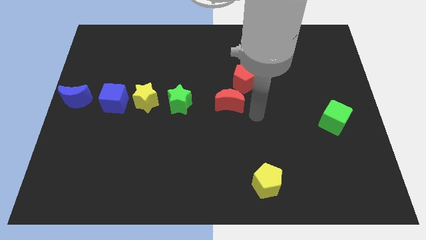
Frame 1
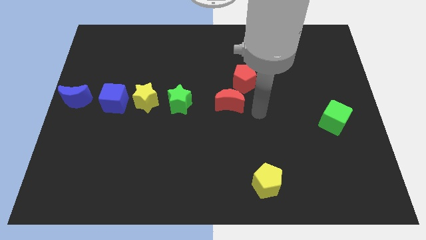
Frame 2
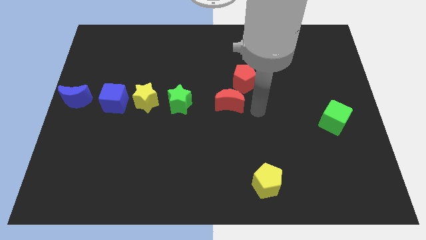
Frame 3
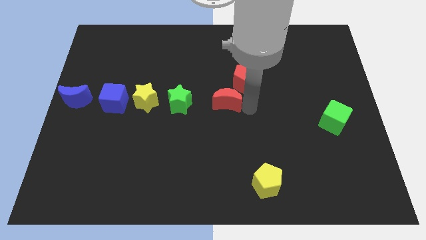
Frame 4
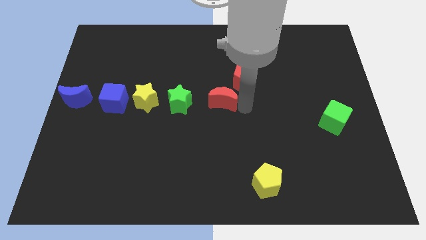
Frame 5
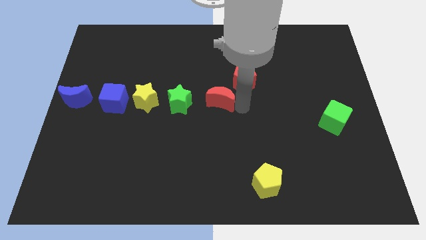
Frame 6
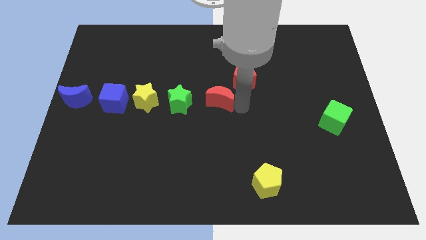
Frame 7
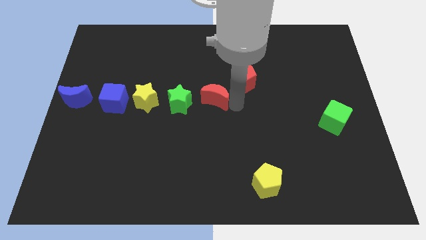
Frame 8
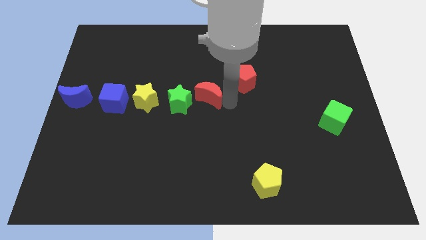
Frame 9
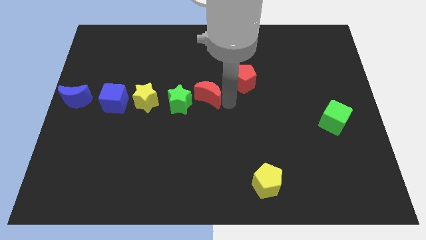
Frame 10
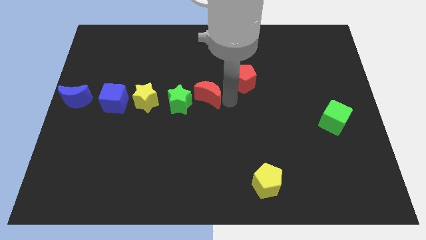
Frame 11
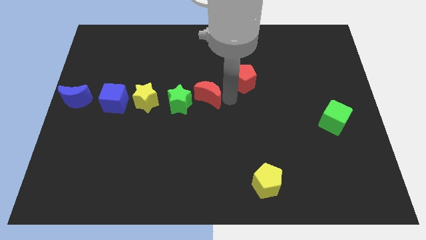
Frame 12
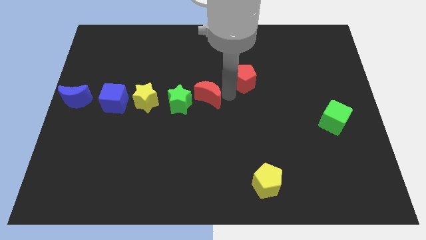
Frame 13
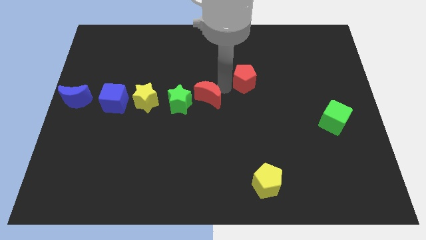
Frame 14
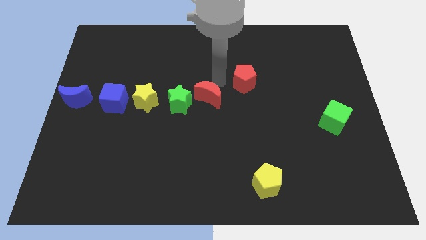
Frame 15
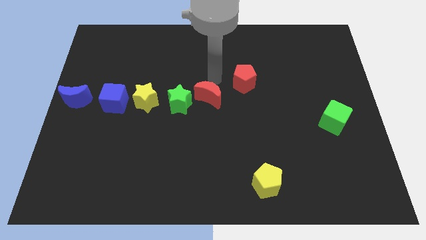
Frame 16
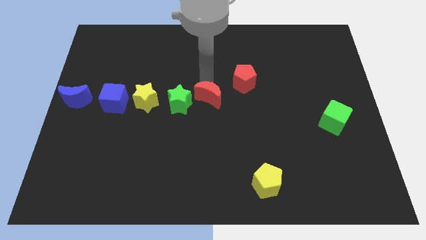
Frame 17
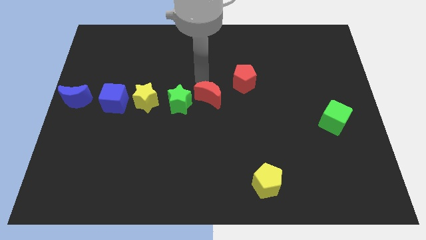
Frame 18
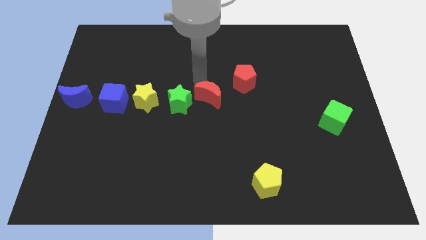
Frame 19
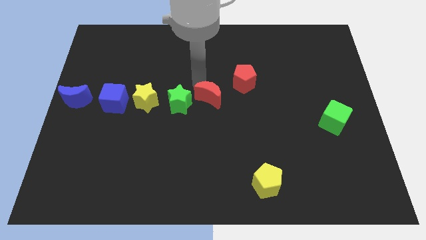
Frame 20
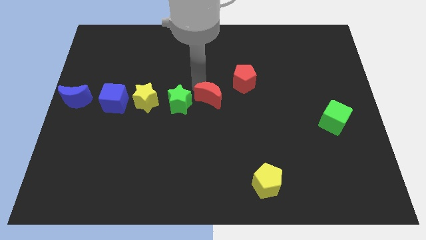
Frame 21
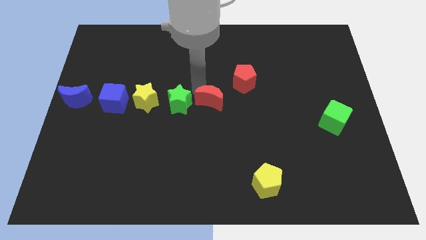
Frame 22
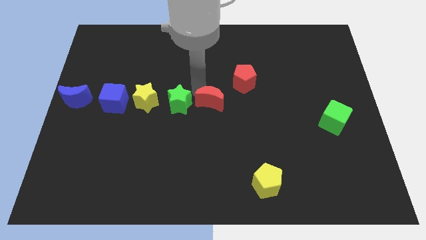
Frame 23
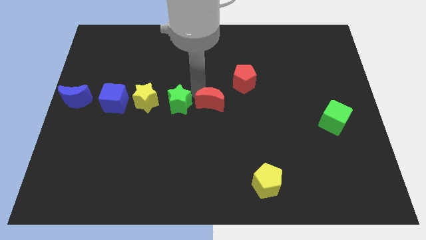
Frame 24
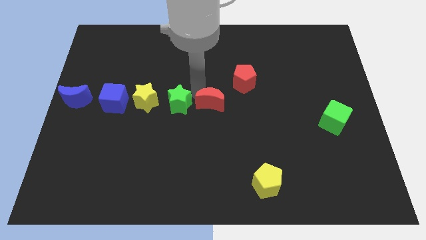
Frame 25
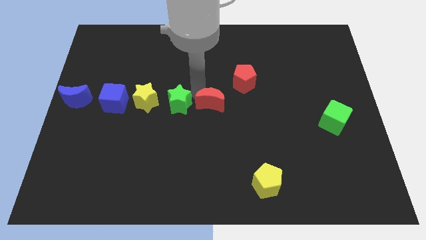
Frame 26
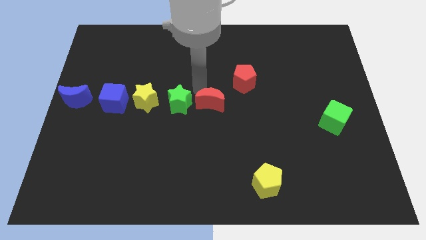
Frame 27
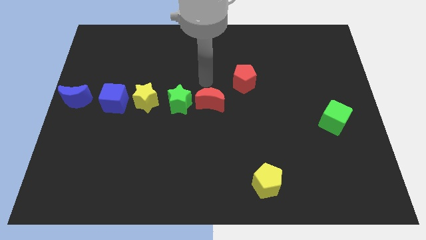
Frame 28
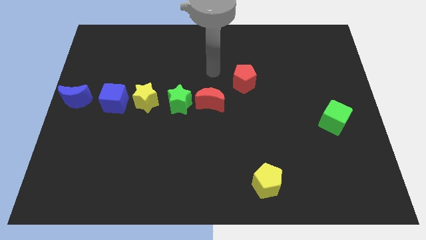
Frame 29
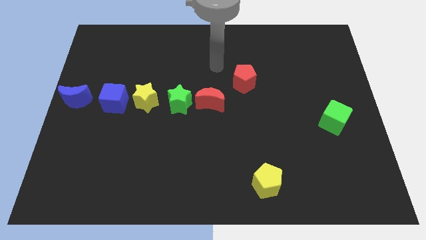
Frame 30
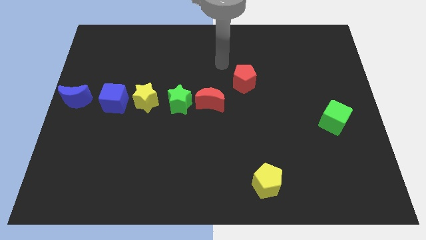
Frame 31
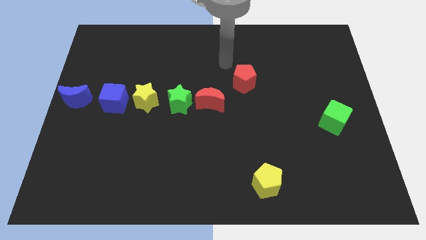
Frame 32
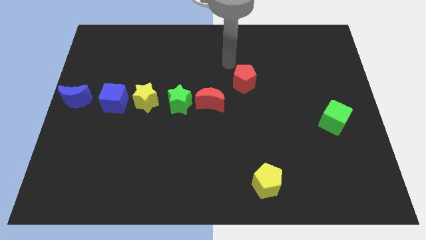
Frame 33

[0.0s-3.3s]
push the red crescent towards right to the green star

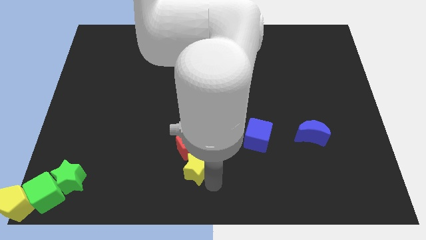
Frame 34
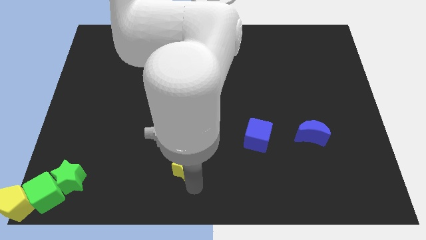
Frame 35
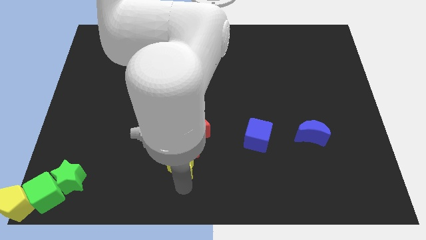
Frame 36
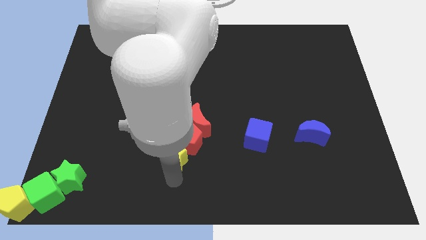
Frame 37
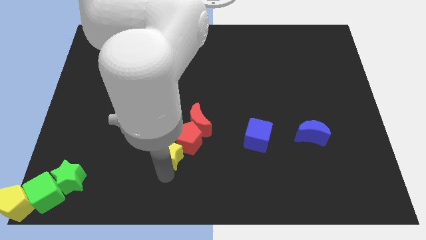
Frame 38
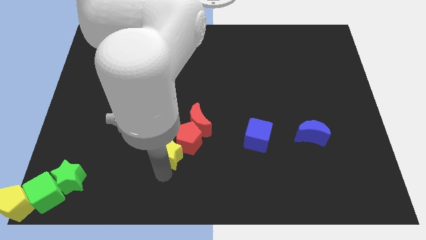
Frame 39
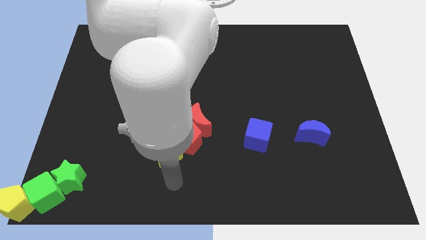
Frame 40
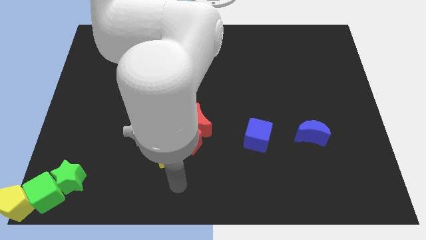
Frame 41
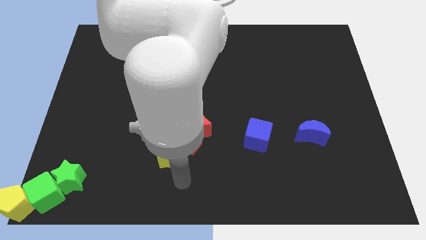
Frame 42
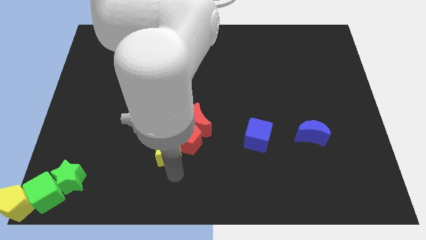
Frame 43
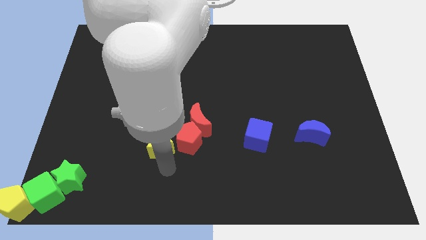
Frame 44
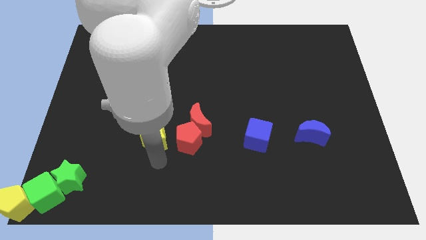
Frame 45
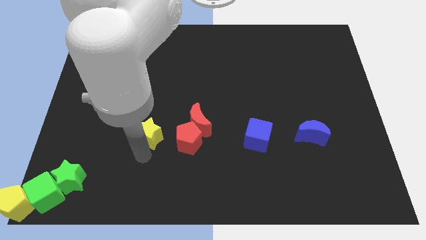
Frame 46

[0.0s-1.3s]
place yellow star left to the red pentagon

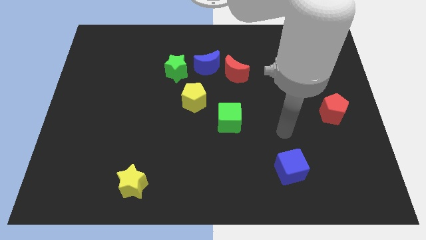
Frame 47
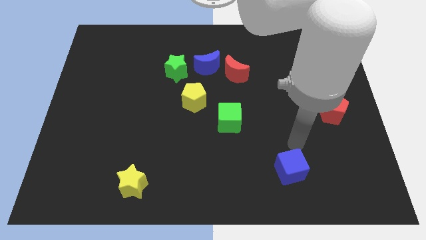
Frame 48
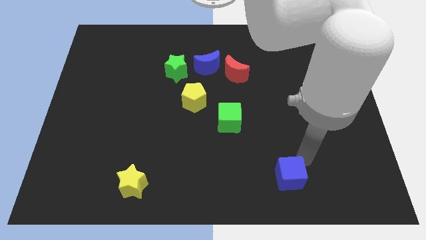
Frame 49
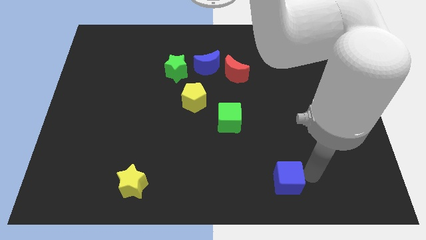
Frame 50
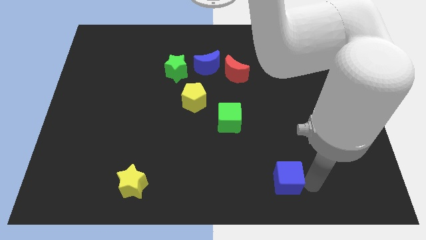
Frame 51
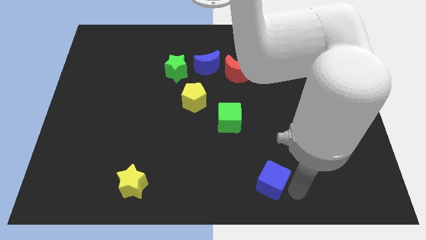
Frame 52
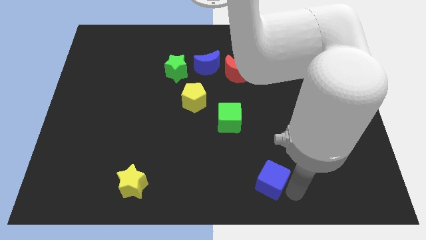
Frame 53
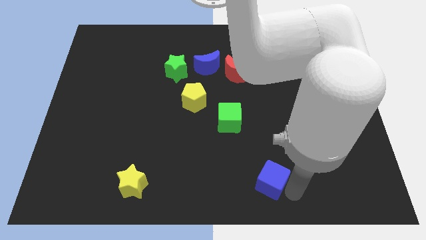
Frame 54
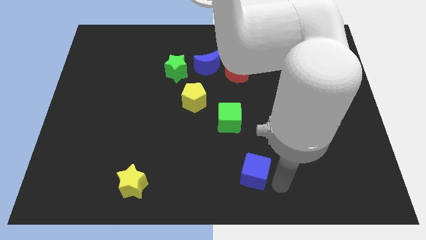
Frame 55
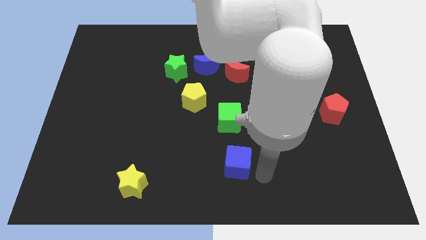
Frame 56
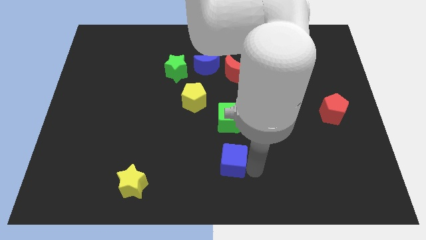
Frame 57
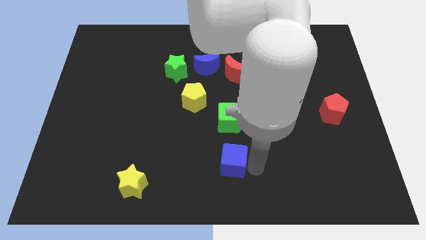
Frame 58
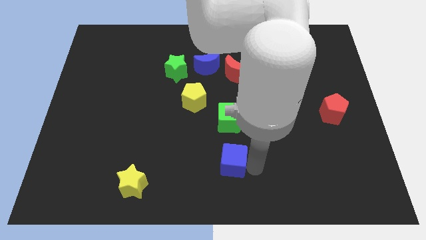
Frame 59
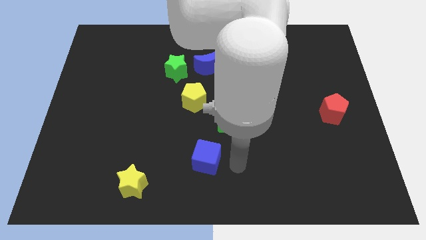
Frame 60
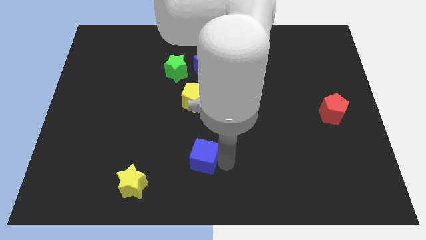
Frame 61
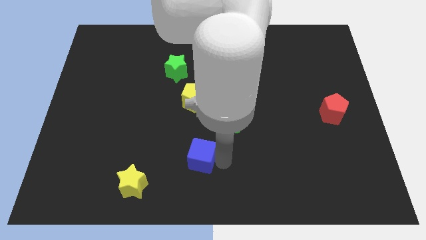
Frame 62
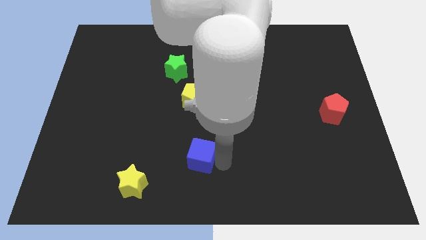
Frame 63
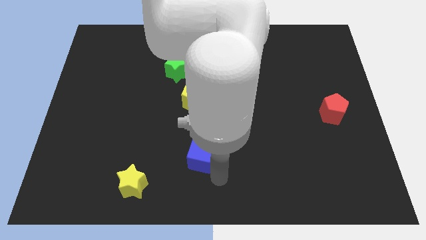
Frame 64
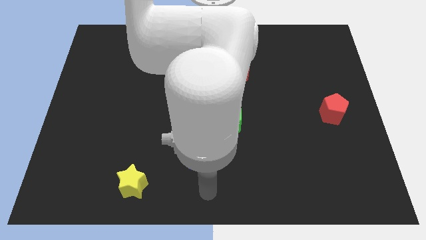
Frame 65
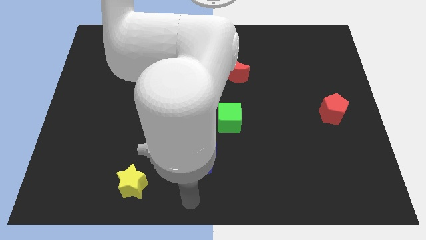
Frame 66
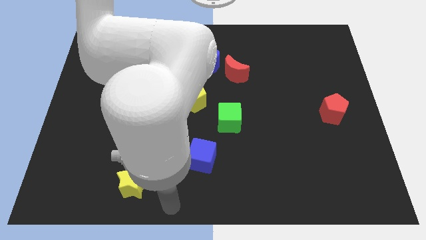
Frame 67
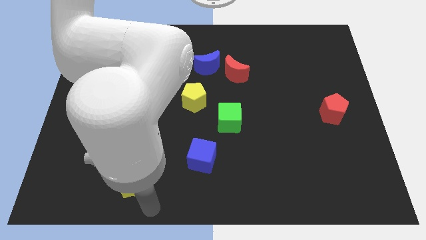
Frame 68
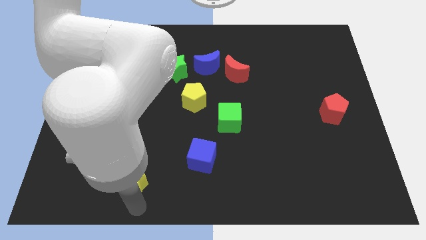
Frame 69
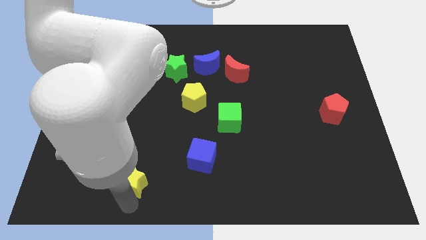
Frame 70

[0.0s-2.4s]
move the blue cube diagonally left of the green cube

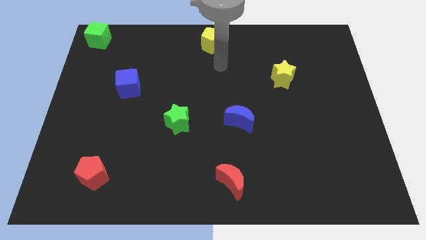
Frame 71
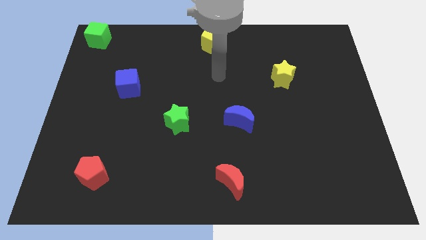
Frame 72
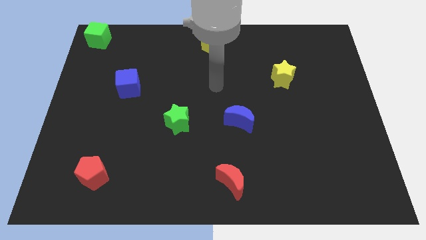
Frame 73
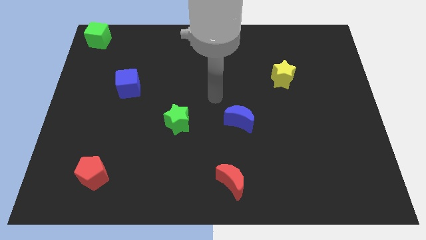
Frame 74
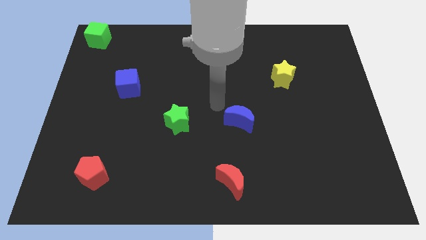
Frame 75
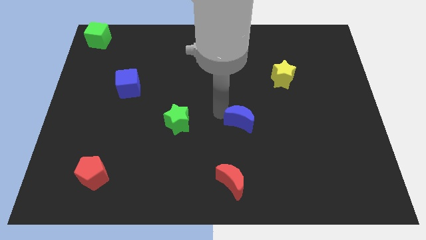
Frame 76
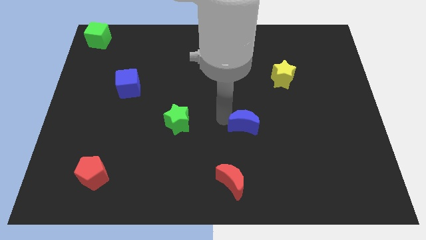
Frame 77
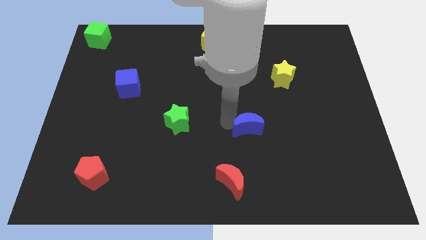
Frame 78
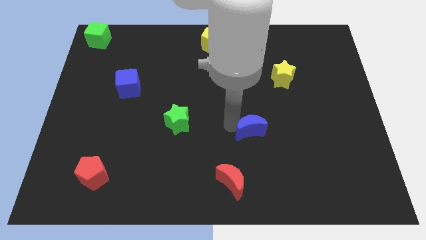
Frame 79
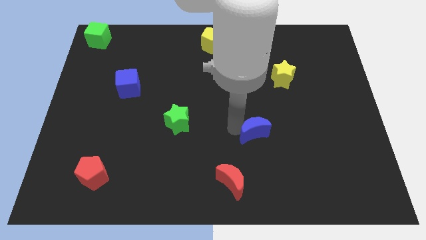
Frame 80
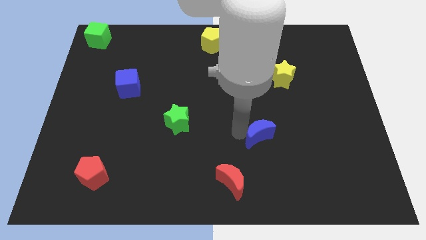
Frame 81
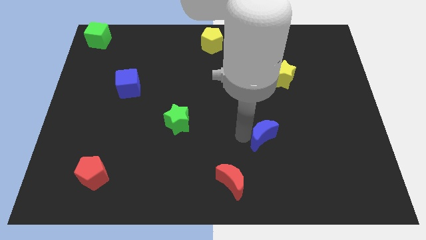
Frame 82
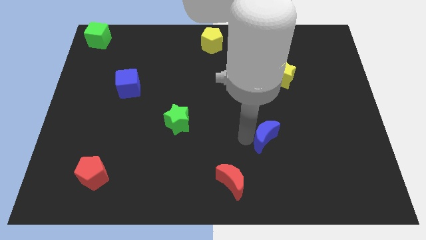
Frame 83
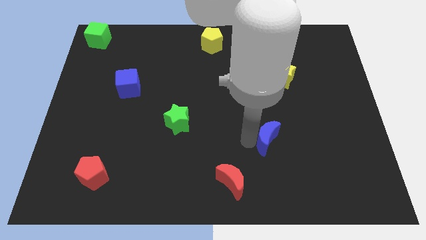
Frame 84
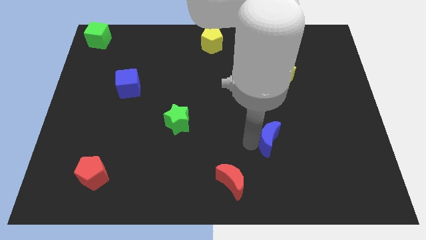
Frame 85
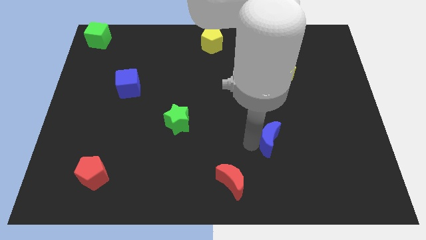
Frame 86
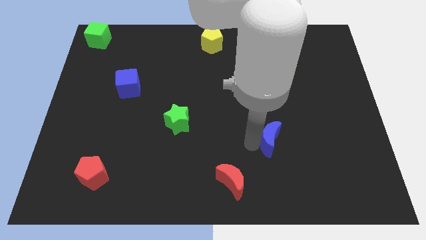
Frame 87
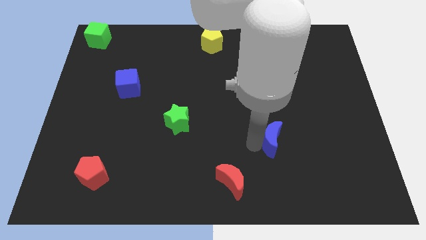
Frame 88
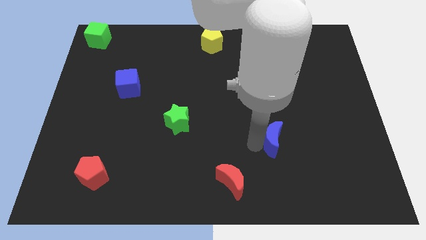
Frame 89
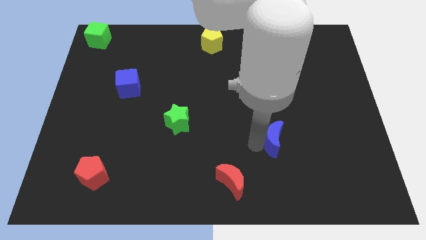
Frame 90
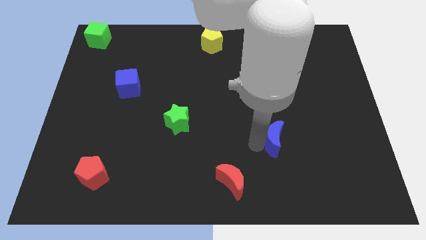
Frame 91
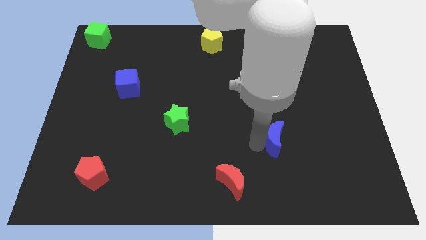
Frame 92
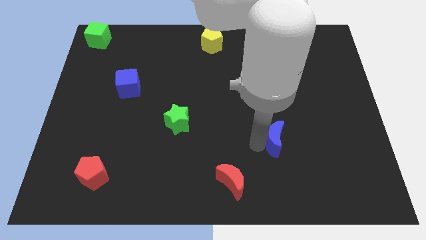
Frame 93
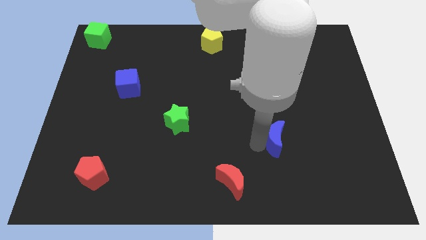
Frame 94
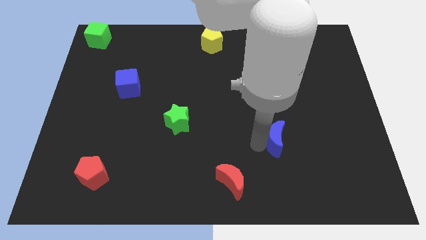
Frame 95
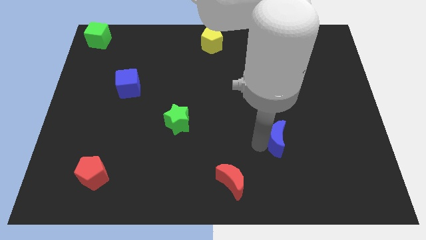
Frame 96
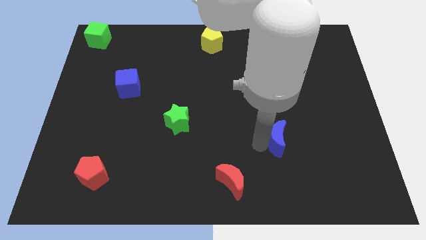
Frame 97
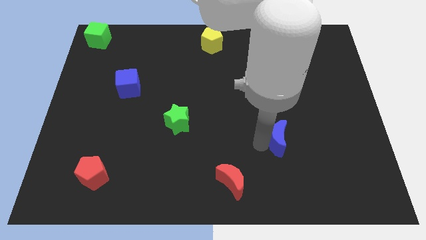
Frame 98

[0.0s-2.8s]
move your arm into the blue crescent
